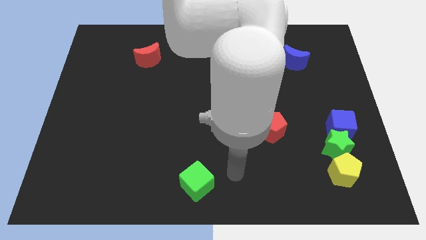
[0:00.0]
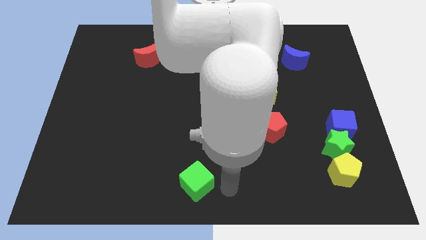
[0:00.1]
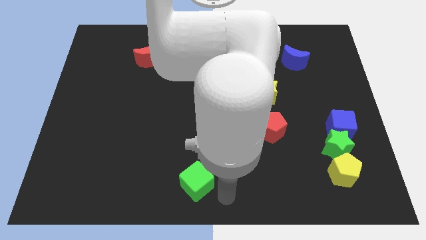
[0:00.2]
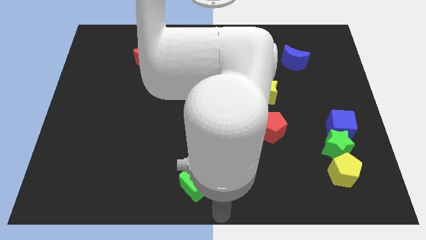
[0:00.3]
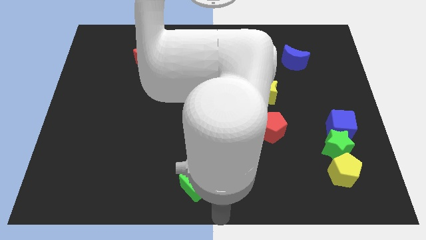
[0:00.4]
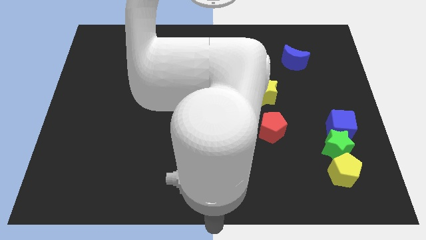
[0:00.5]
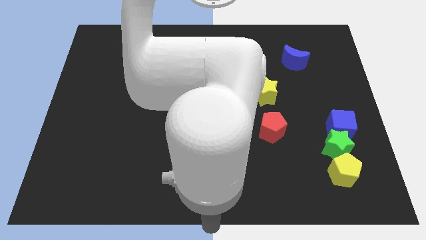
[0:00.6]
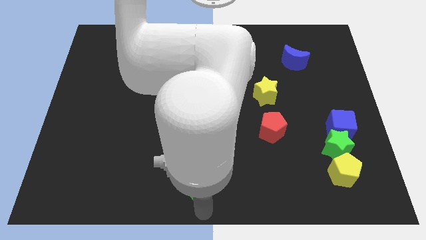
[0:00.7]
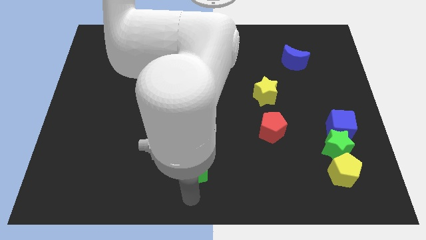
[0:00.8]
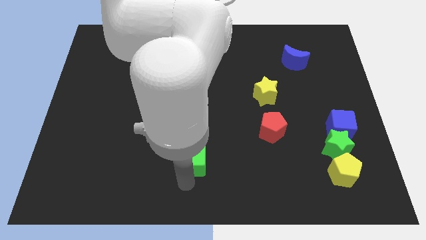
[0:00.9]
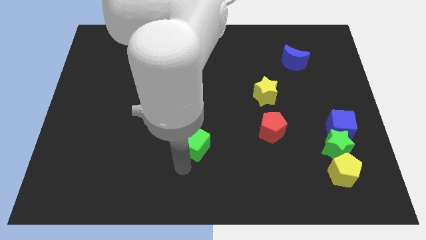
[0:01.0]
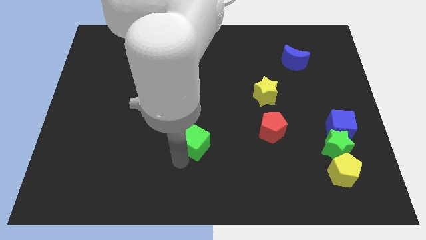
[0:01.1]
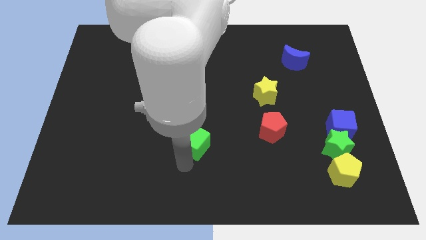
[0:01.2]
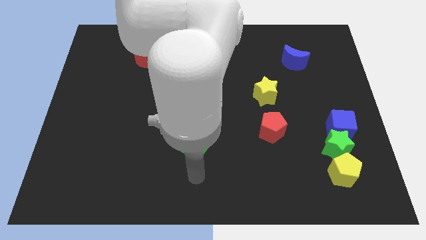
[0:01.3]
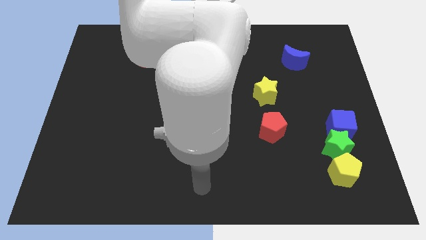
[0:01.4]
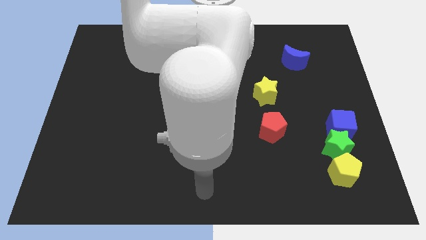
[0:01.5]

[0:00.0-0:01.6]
push the green cube towards up

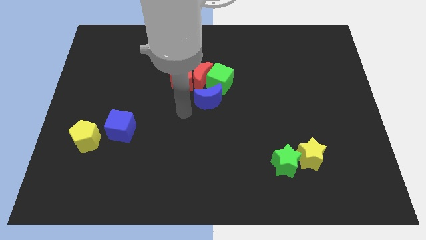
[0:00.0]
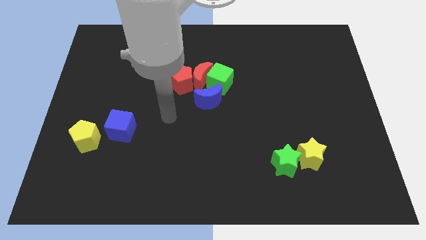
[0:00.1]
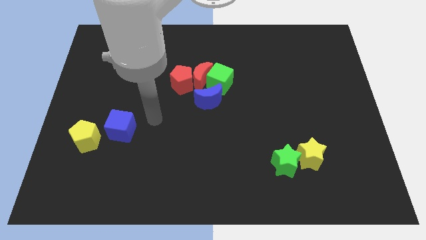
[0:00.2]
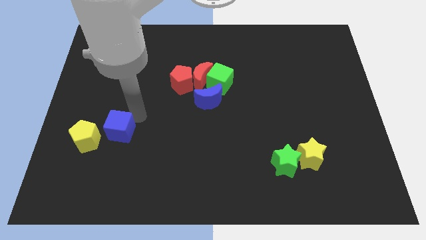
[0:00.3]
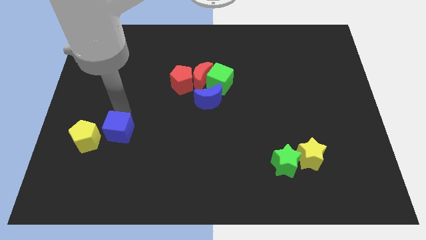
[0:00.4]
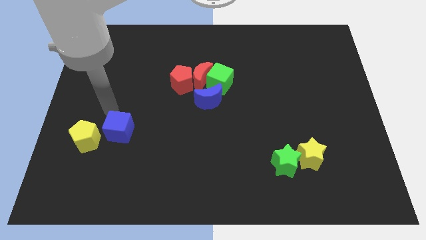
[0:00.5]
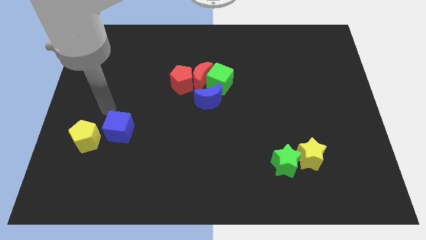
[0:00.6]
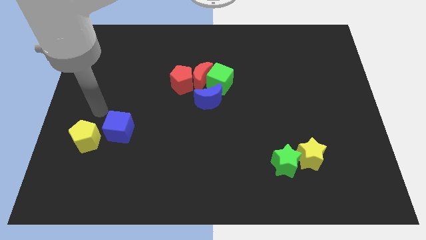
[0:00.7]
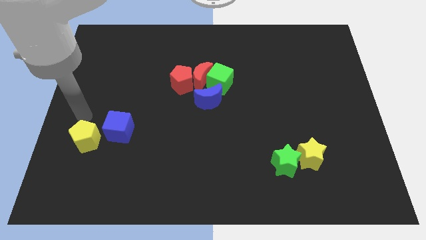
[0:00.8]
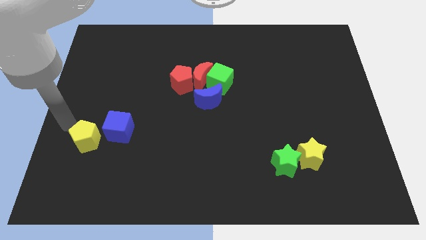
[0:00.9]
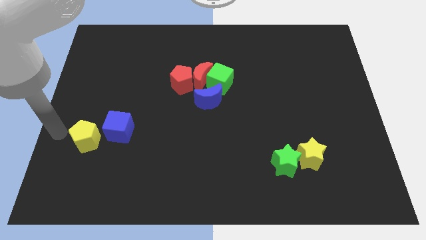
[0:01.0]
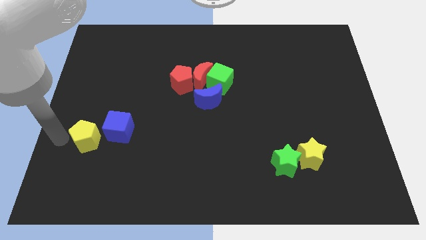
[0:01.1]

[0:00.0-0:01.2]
move your arm to the left side of the yellow pentagon

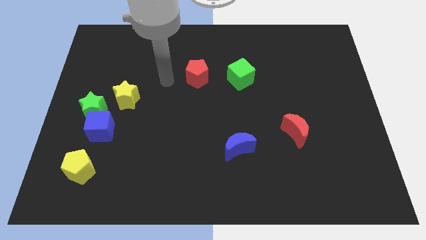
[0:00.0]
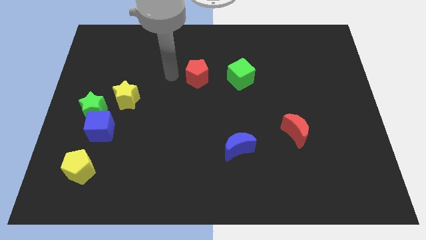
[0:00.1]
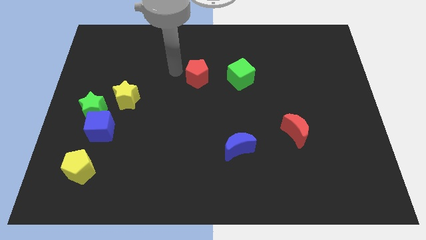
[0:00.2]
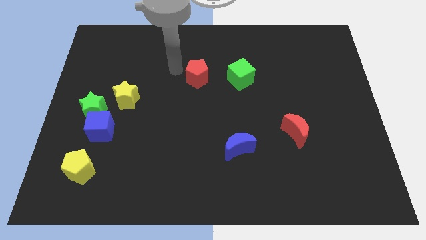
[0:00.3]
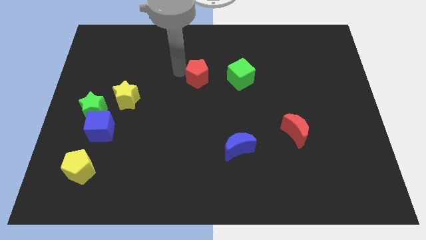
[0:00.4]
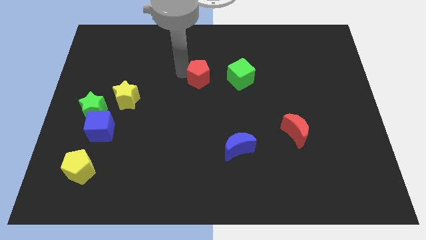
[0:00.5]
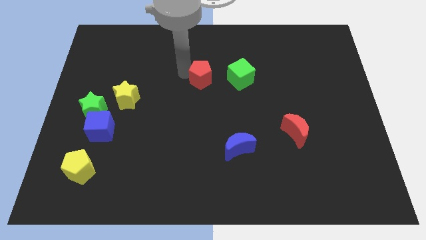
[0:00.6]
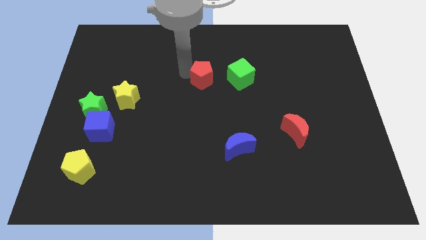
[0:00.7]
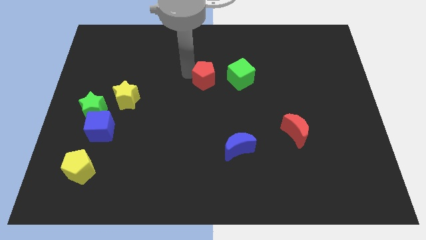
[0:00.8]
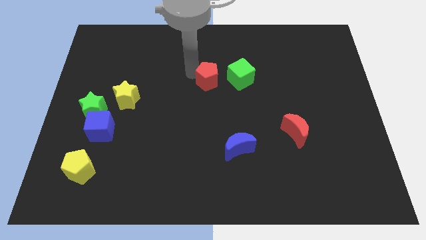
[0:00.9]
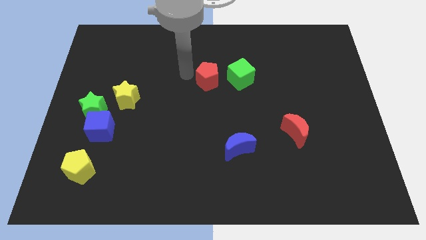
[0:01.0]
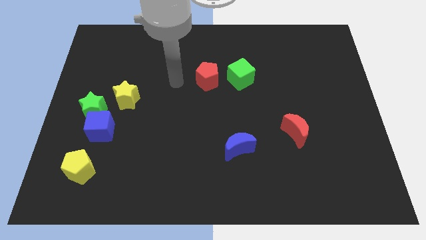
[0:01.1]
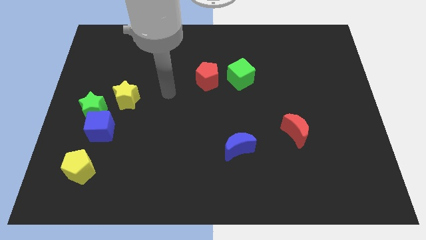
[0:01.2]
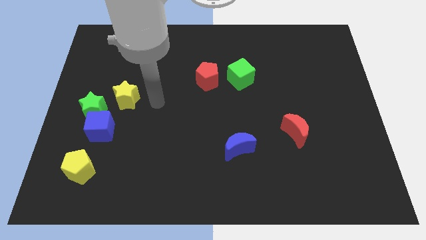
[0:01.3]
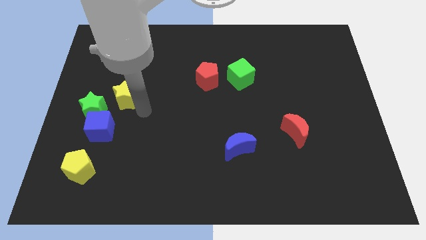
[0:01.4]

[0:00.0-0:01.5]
push the red pentagon left to the green cube

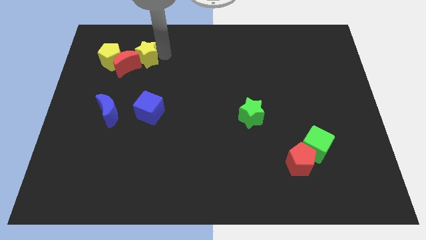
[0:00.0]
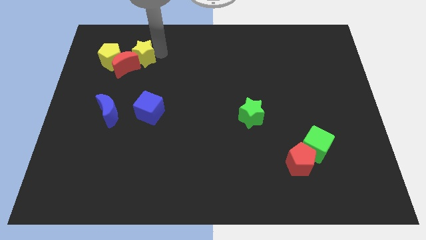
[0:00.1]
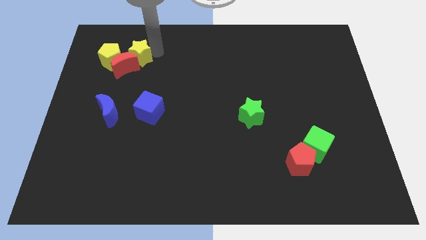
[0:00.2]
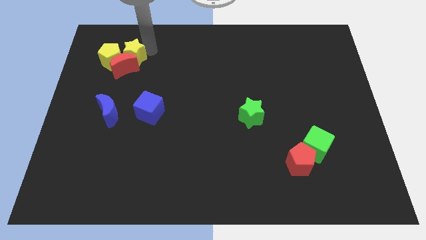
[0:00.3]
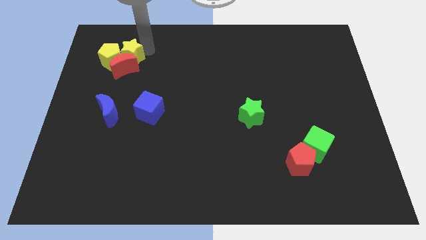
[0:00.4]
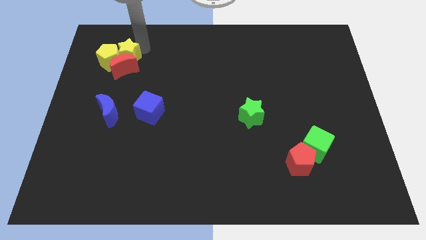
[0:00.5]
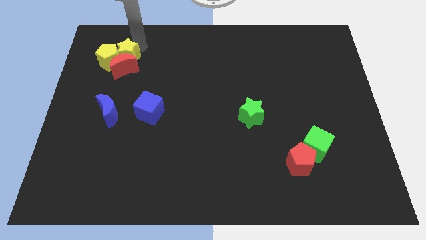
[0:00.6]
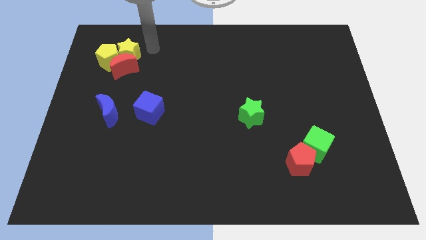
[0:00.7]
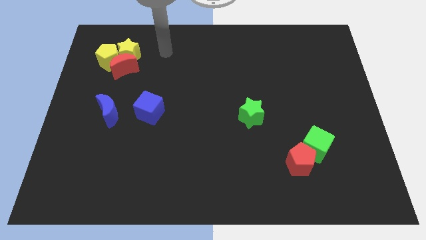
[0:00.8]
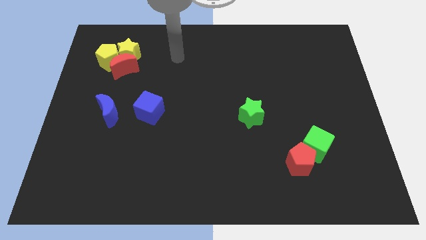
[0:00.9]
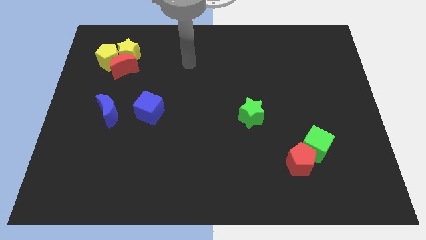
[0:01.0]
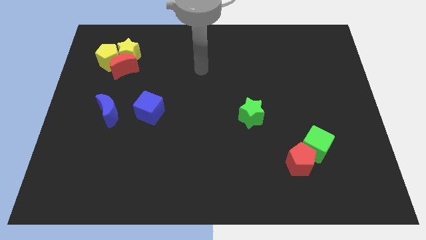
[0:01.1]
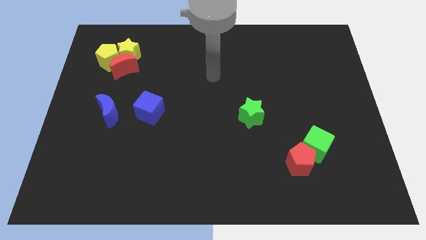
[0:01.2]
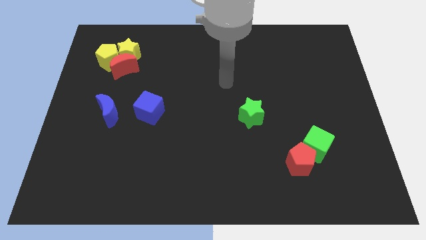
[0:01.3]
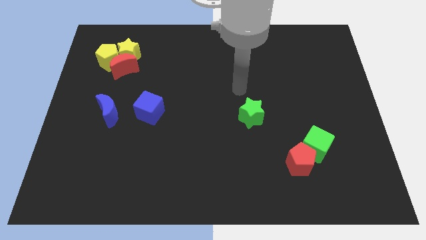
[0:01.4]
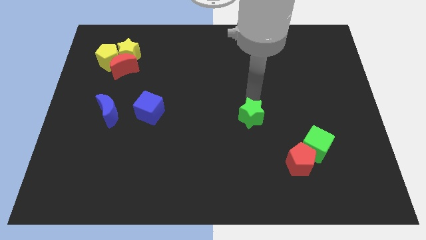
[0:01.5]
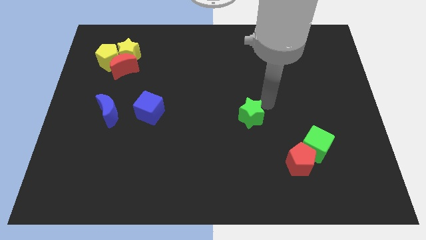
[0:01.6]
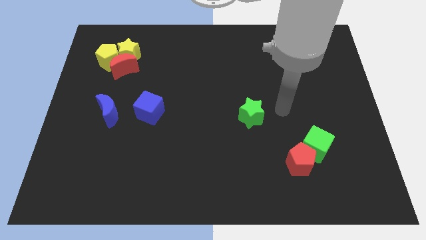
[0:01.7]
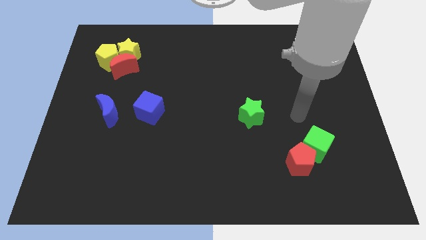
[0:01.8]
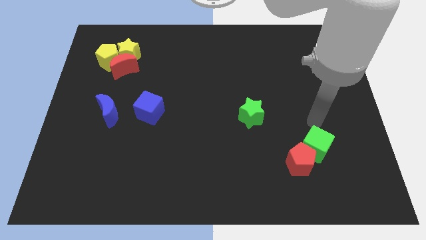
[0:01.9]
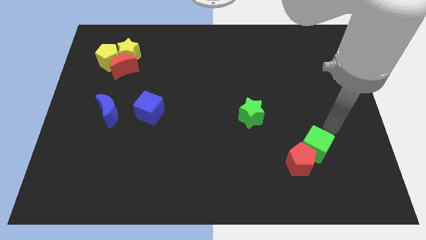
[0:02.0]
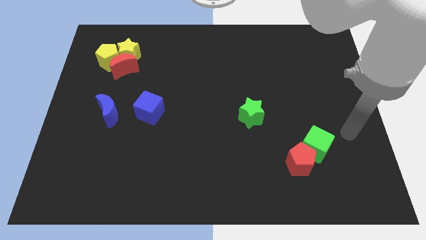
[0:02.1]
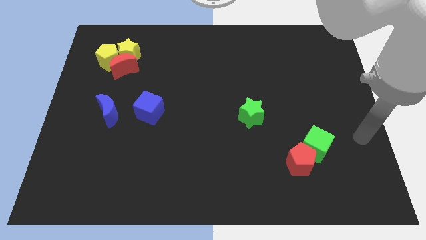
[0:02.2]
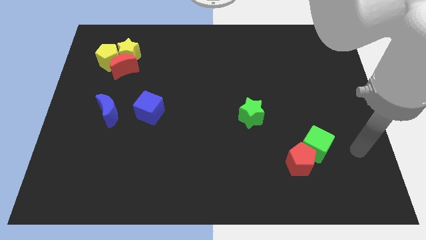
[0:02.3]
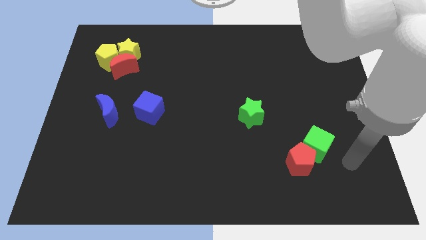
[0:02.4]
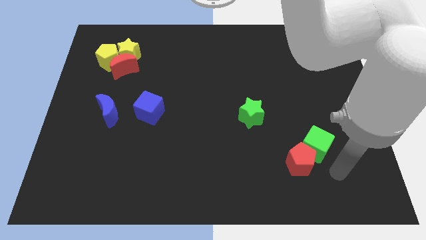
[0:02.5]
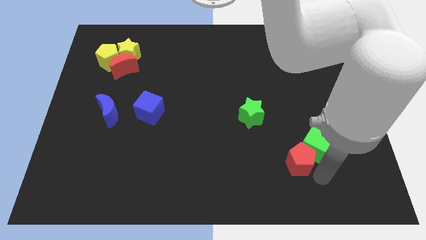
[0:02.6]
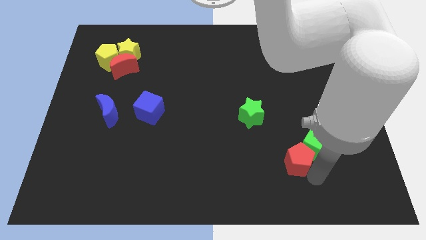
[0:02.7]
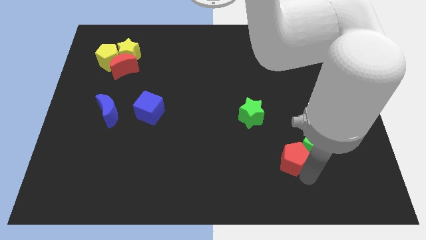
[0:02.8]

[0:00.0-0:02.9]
move your arm near red pentagon

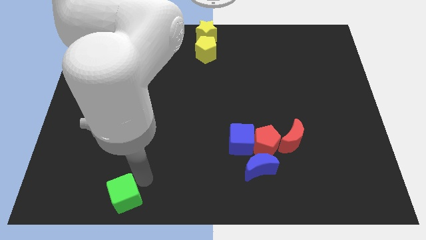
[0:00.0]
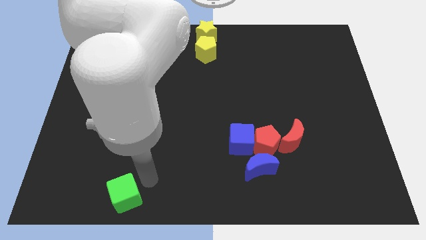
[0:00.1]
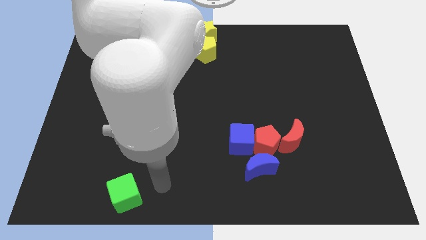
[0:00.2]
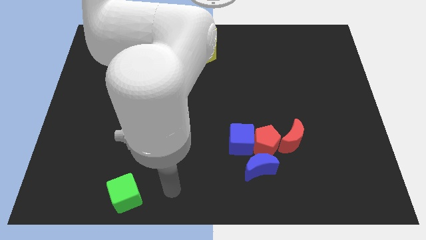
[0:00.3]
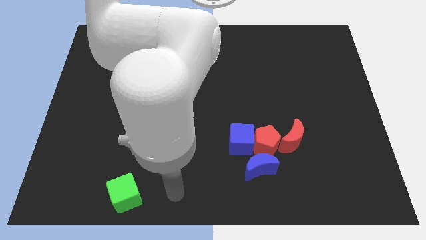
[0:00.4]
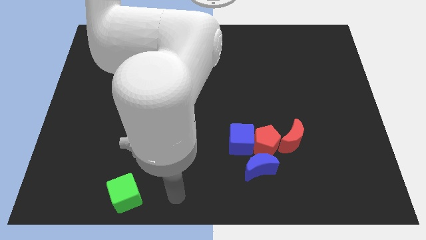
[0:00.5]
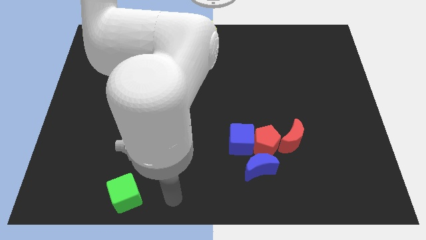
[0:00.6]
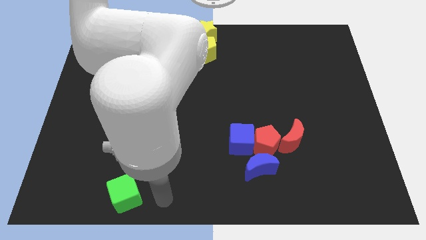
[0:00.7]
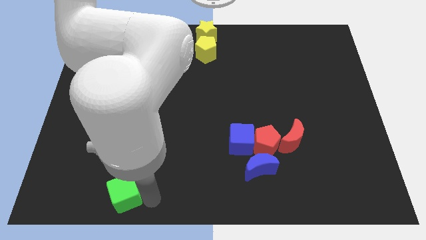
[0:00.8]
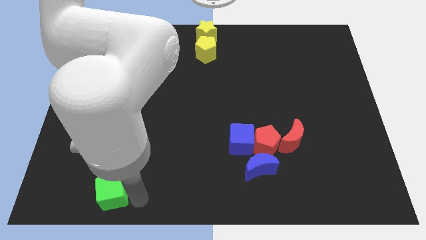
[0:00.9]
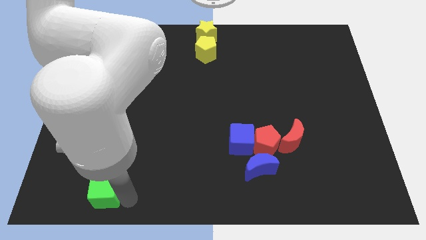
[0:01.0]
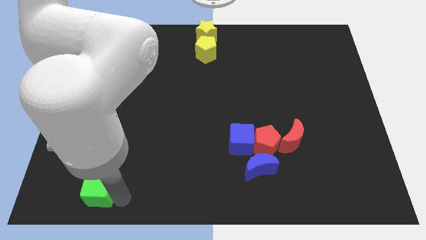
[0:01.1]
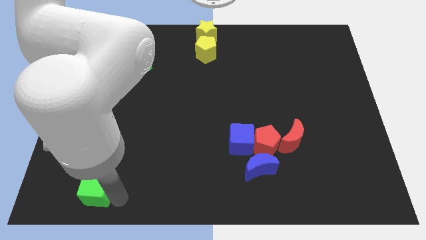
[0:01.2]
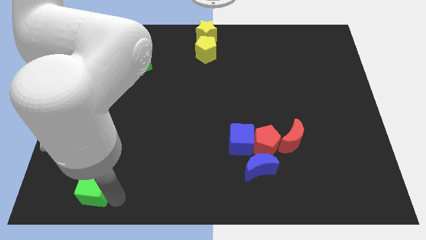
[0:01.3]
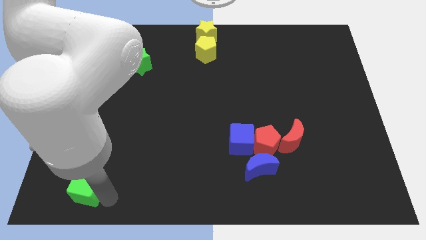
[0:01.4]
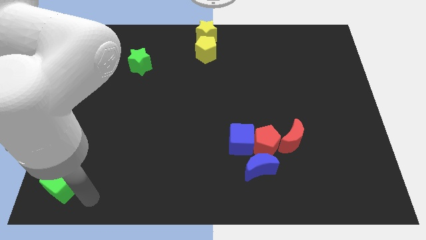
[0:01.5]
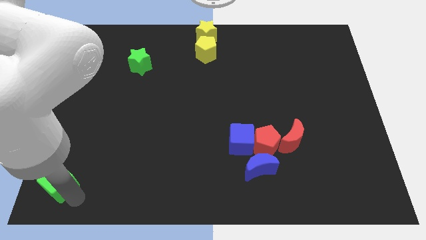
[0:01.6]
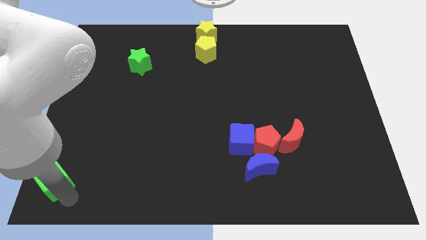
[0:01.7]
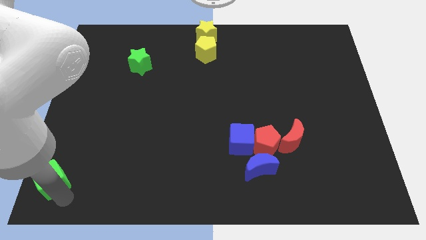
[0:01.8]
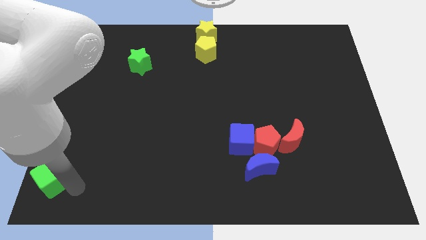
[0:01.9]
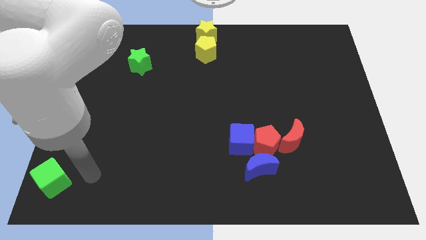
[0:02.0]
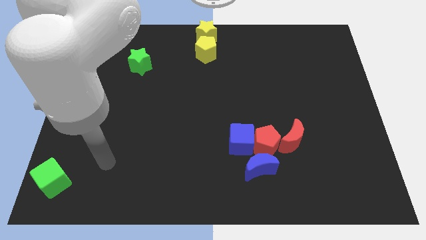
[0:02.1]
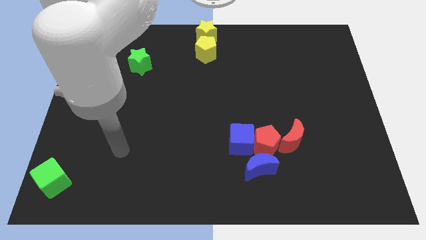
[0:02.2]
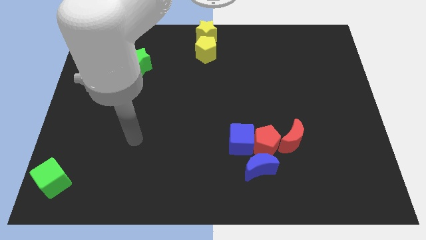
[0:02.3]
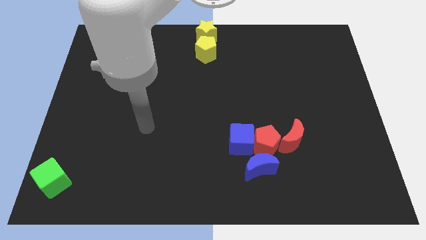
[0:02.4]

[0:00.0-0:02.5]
push the green cube to the bottom left side of the board
